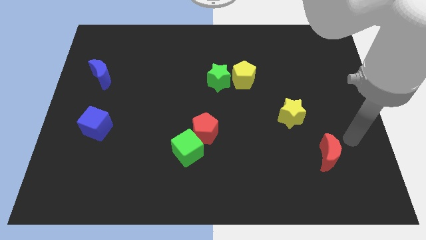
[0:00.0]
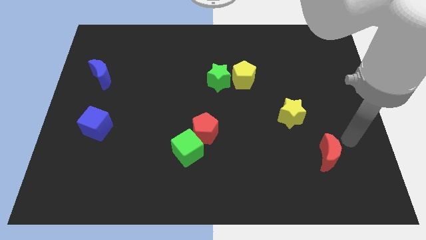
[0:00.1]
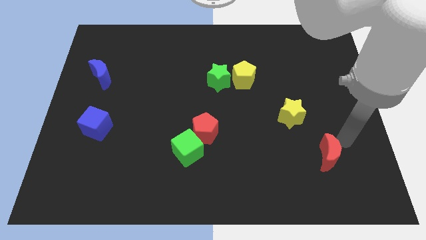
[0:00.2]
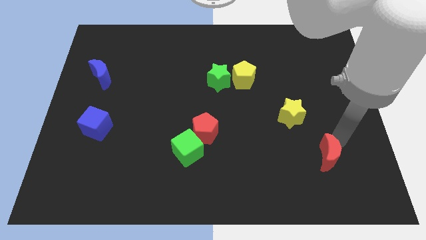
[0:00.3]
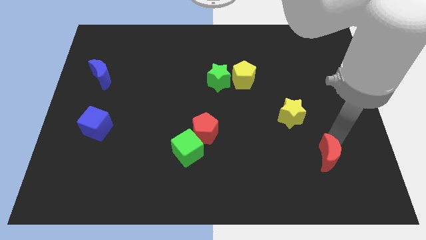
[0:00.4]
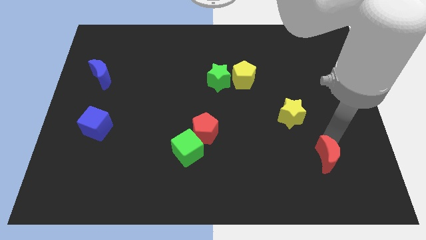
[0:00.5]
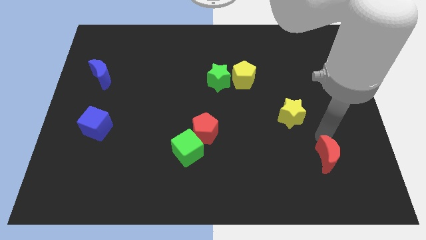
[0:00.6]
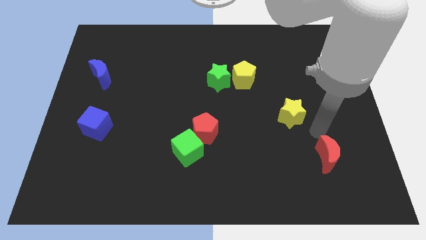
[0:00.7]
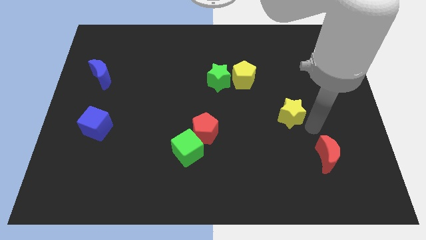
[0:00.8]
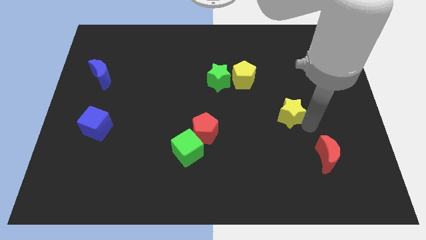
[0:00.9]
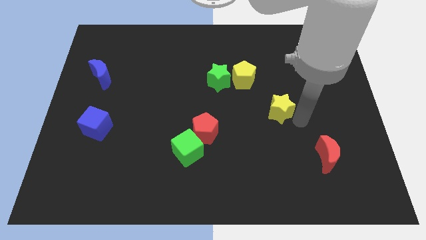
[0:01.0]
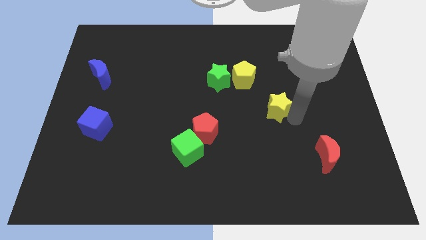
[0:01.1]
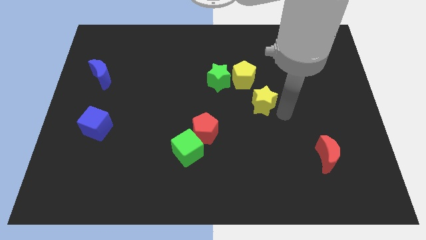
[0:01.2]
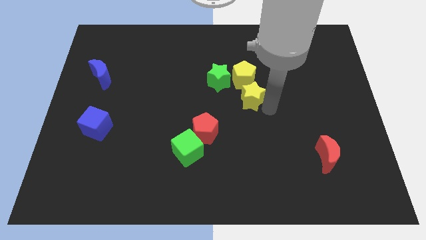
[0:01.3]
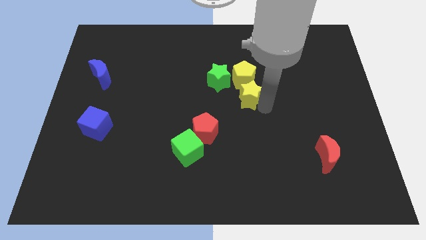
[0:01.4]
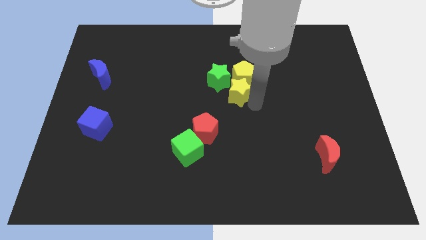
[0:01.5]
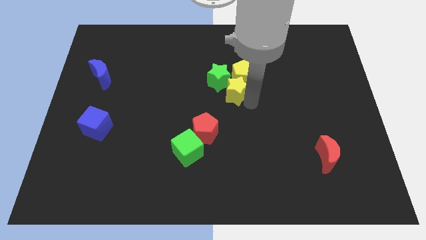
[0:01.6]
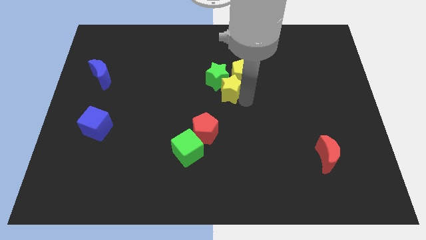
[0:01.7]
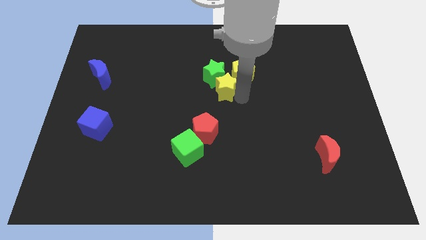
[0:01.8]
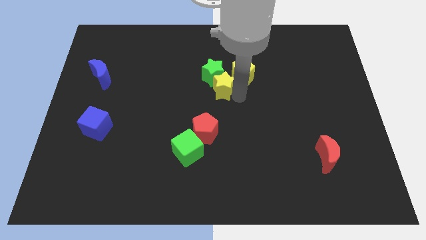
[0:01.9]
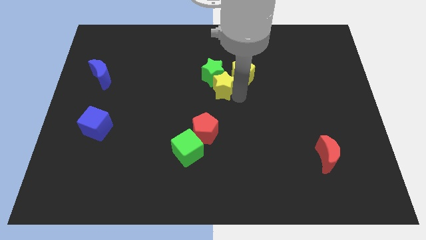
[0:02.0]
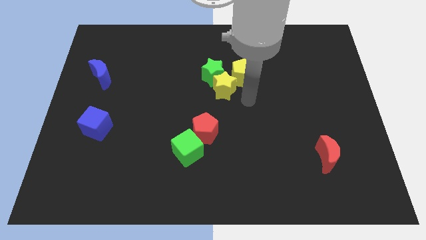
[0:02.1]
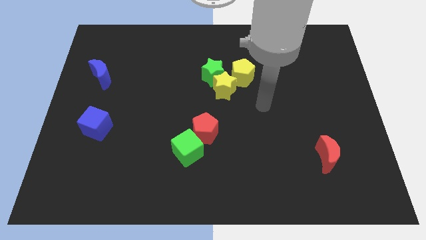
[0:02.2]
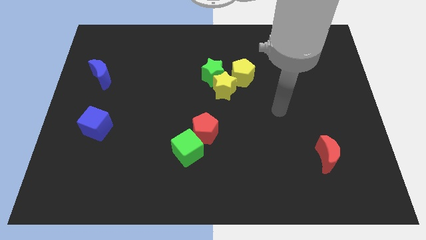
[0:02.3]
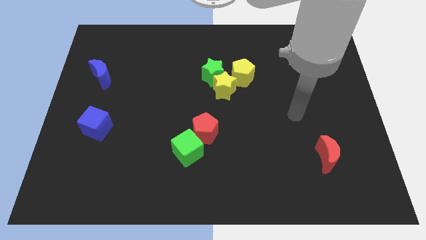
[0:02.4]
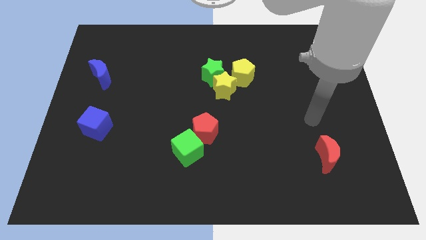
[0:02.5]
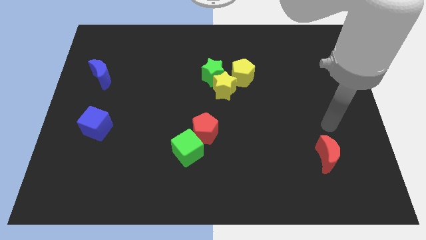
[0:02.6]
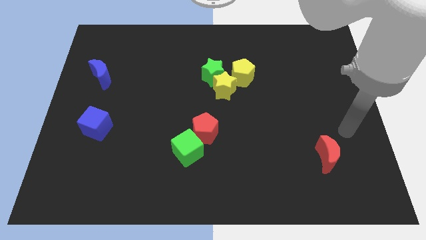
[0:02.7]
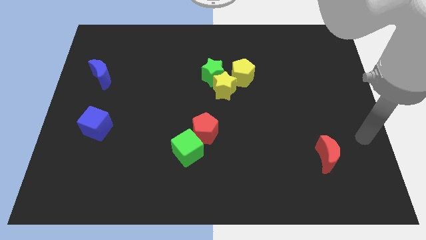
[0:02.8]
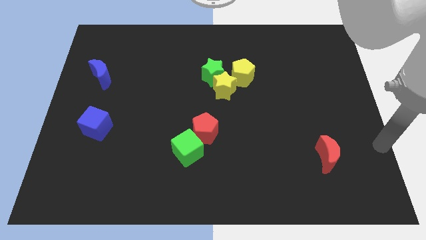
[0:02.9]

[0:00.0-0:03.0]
push the yellow star into the group of blocks

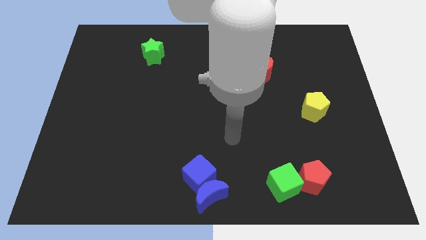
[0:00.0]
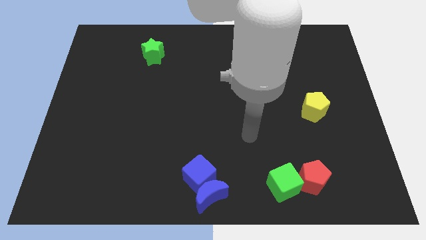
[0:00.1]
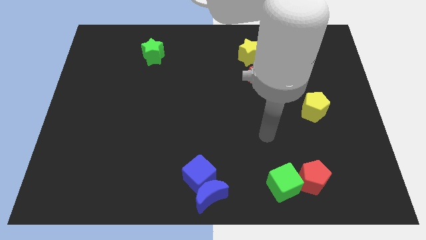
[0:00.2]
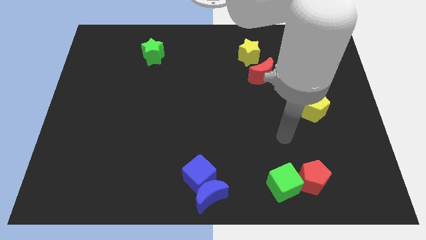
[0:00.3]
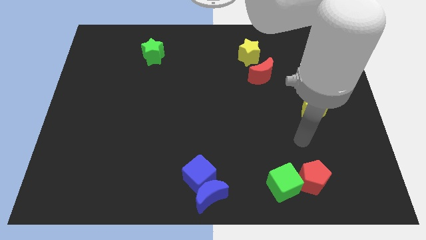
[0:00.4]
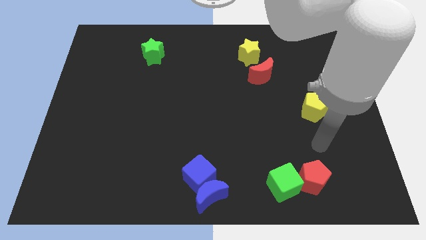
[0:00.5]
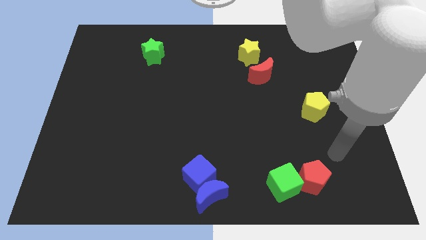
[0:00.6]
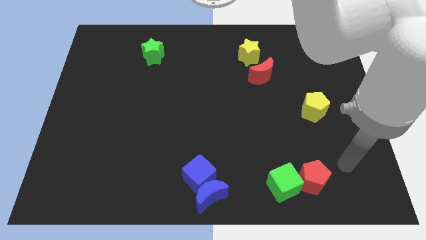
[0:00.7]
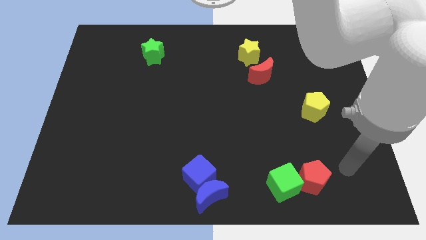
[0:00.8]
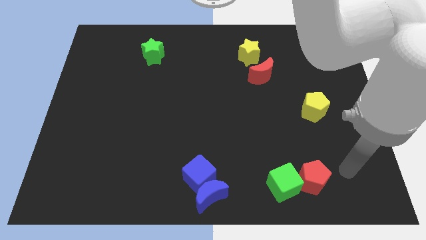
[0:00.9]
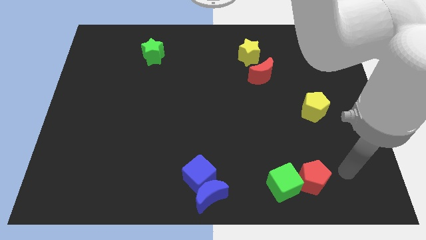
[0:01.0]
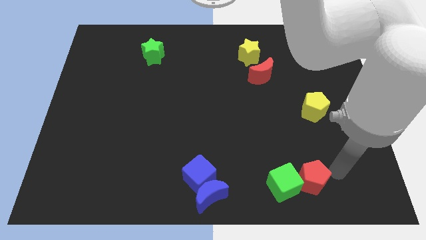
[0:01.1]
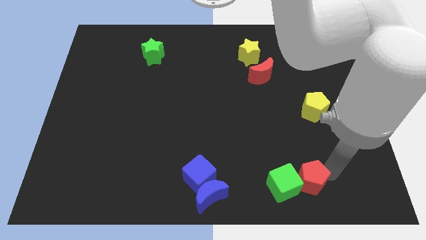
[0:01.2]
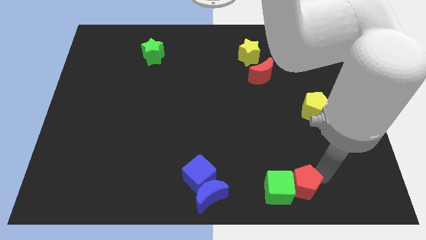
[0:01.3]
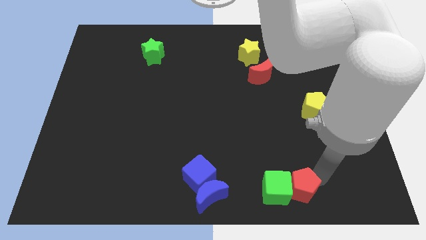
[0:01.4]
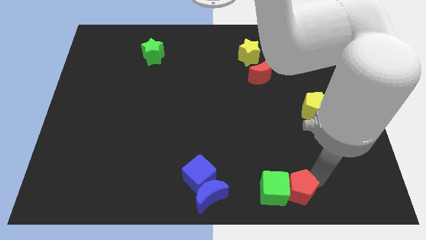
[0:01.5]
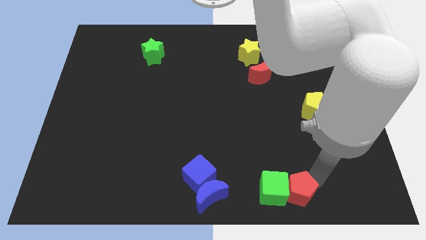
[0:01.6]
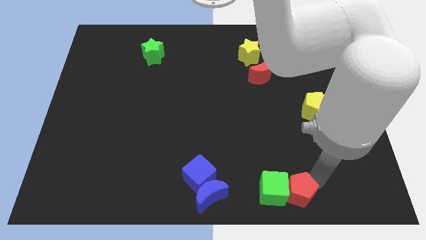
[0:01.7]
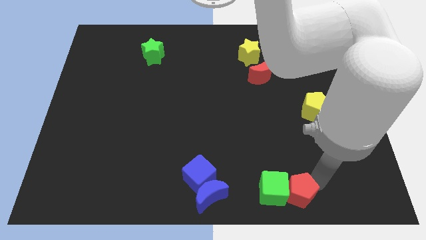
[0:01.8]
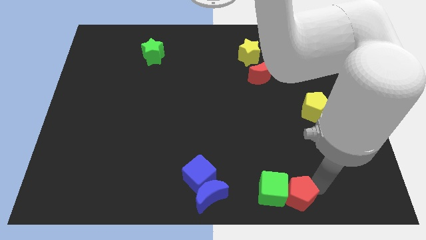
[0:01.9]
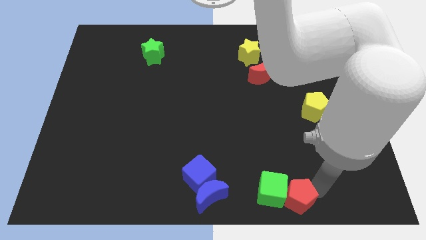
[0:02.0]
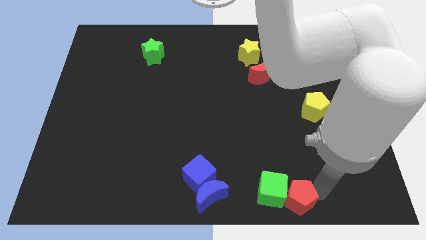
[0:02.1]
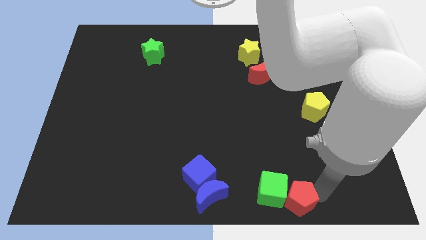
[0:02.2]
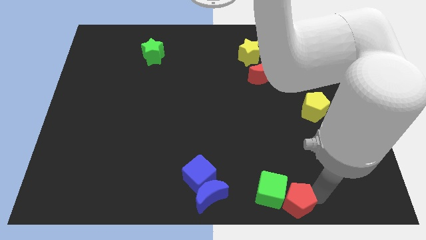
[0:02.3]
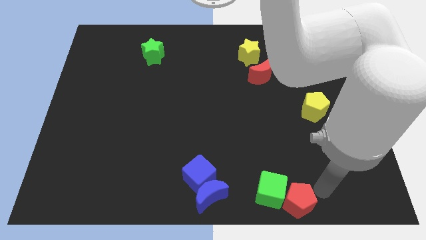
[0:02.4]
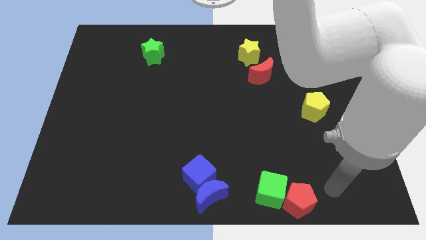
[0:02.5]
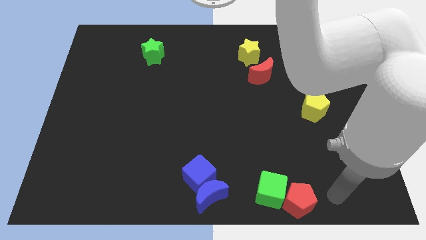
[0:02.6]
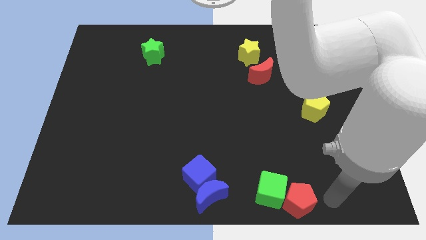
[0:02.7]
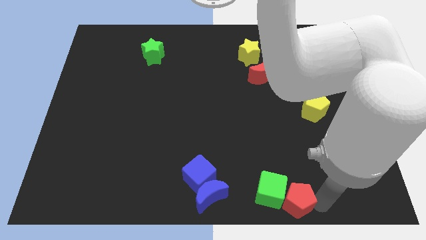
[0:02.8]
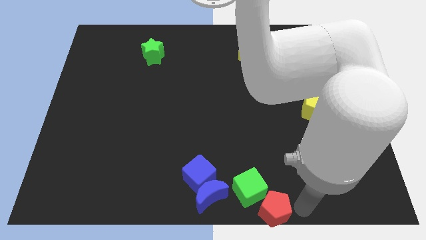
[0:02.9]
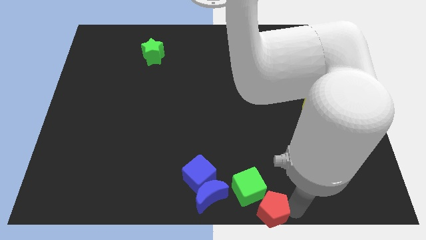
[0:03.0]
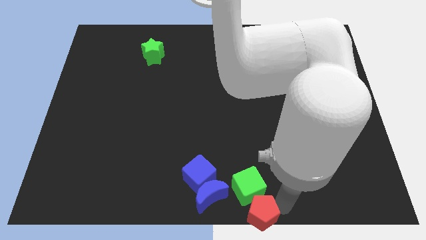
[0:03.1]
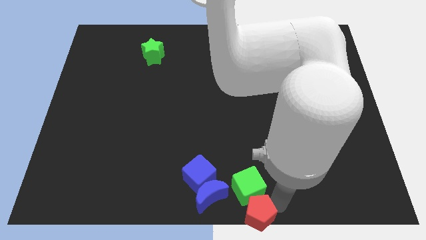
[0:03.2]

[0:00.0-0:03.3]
move both green cube and red pentagon to bottom center of the board

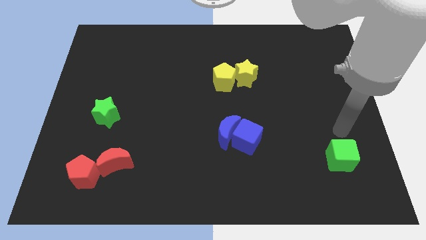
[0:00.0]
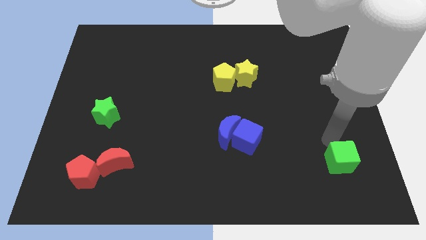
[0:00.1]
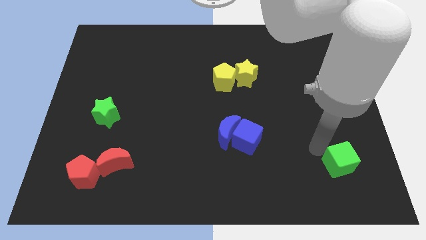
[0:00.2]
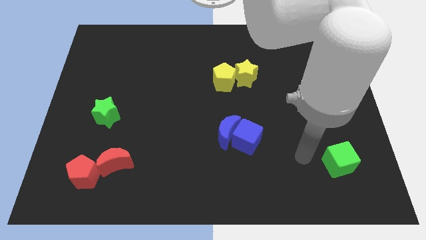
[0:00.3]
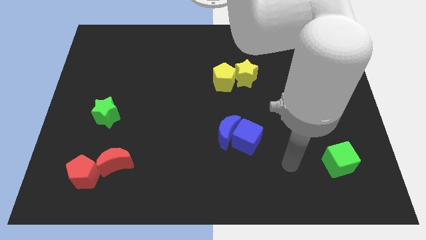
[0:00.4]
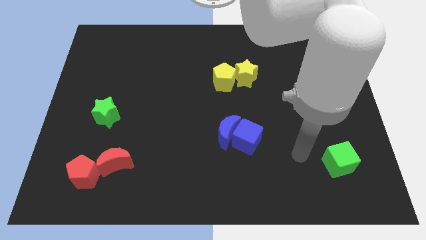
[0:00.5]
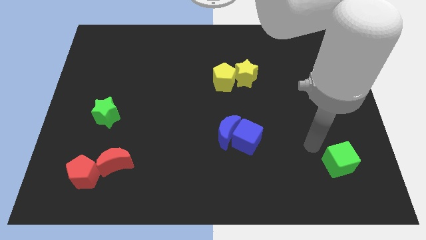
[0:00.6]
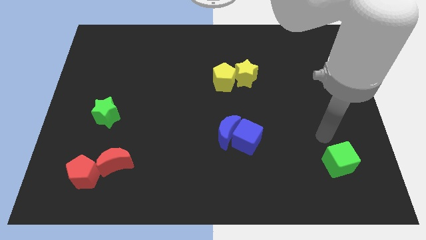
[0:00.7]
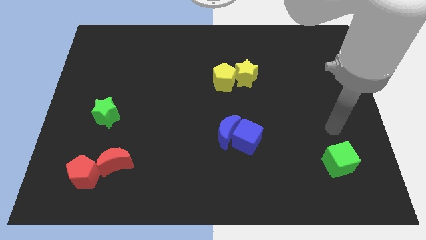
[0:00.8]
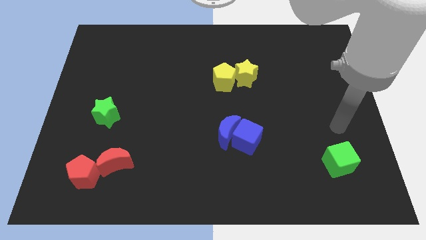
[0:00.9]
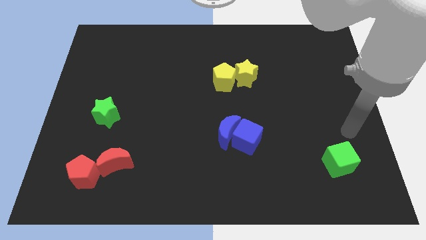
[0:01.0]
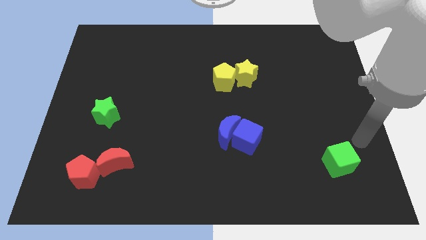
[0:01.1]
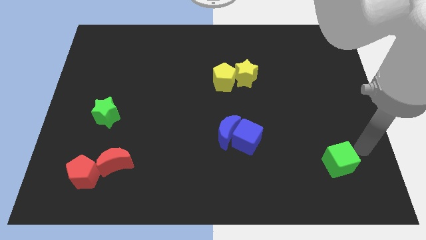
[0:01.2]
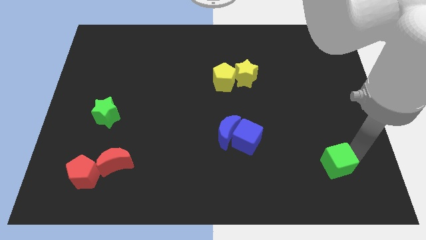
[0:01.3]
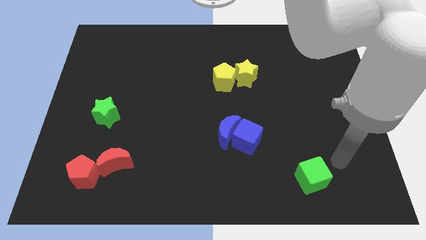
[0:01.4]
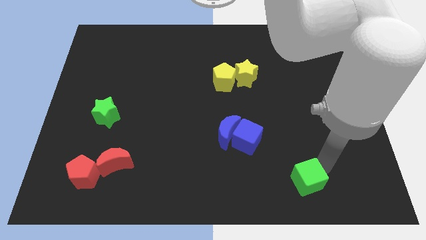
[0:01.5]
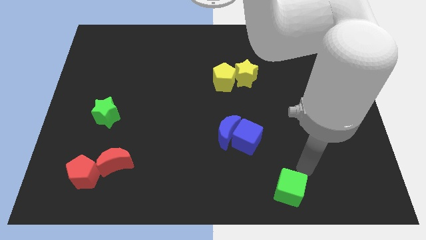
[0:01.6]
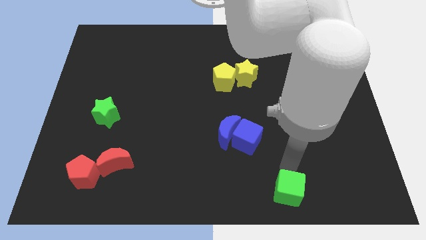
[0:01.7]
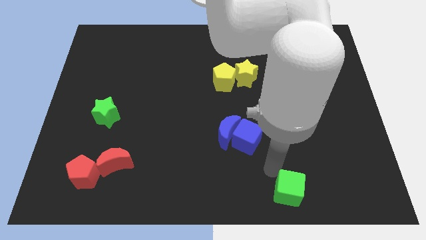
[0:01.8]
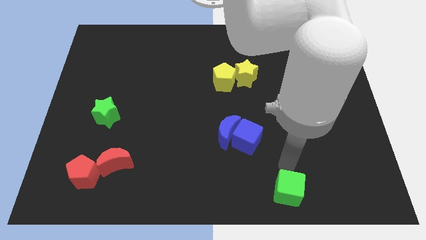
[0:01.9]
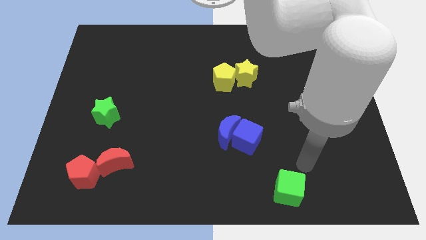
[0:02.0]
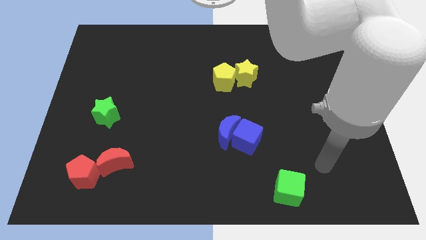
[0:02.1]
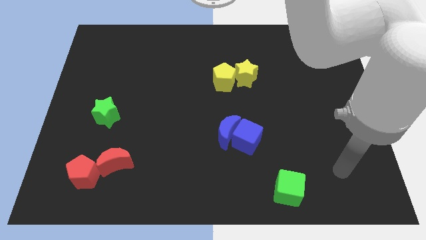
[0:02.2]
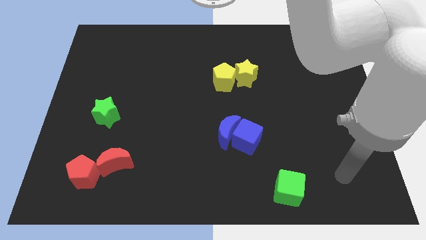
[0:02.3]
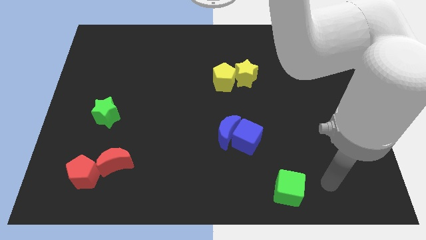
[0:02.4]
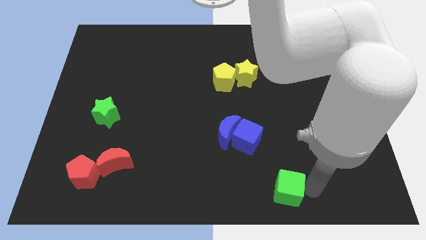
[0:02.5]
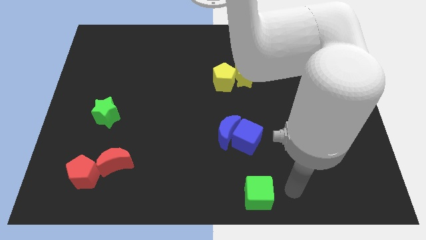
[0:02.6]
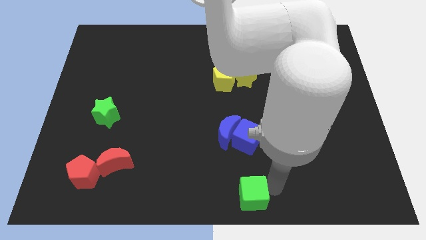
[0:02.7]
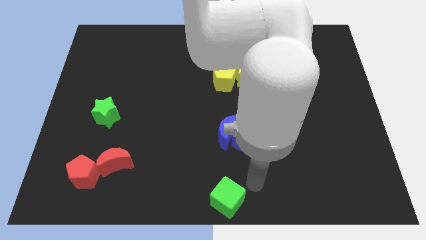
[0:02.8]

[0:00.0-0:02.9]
place the green cube to the bottom middle of the board
